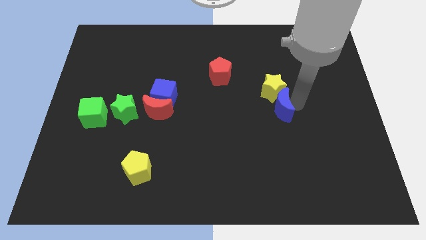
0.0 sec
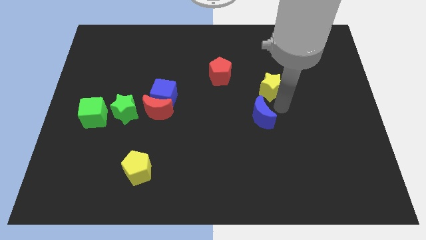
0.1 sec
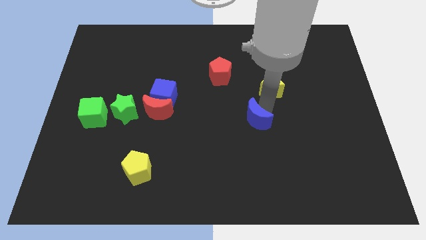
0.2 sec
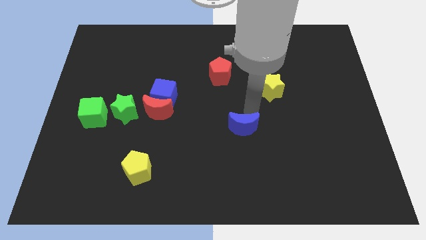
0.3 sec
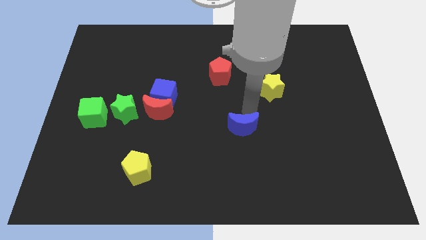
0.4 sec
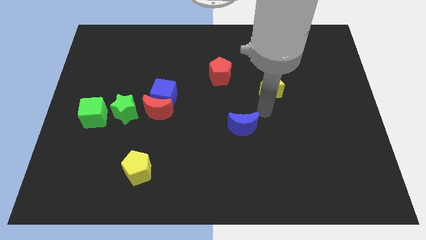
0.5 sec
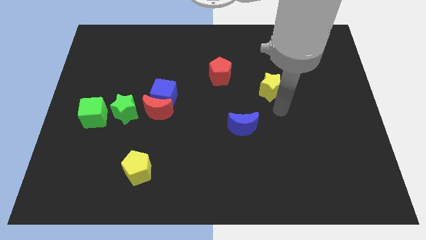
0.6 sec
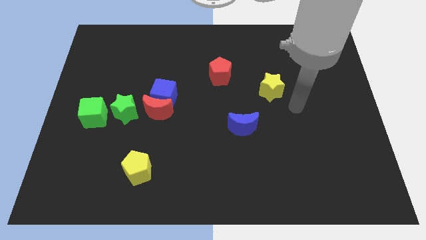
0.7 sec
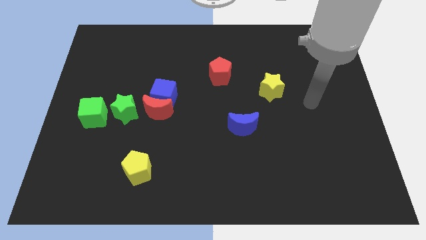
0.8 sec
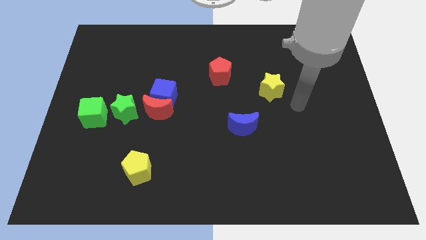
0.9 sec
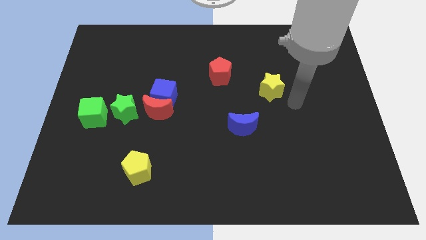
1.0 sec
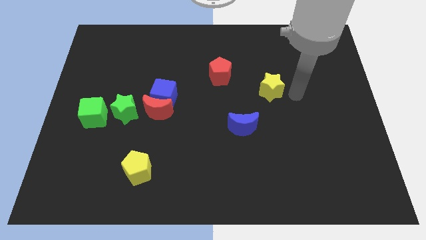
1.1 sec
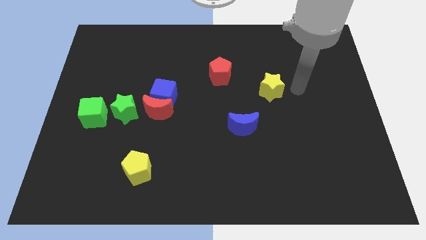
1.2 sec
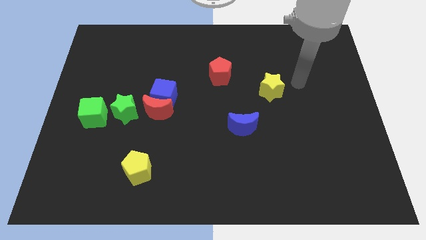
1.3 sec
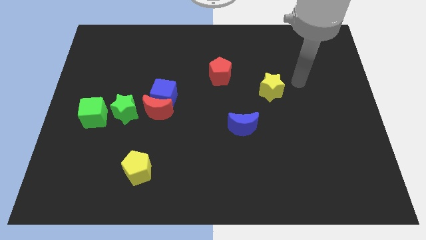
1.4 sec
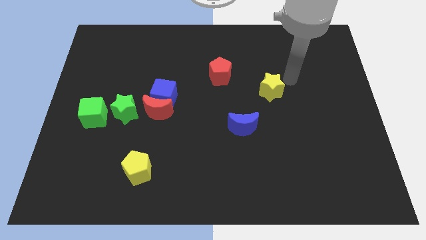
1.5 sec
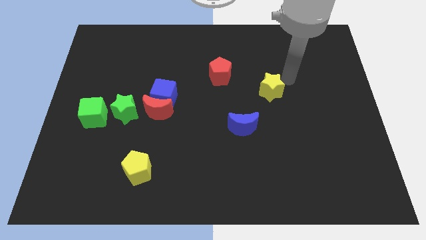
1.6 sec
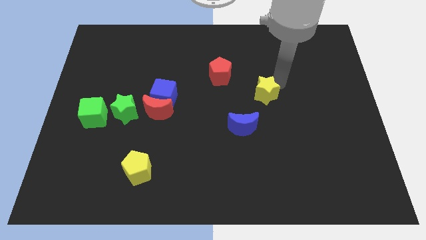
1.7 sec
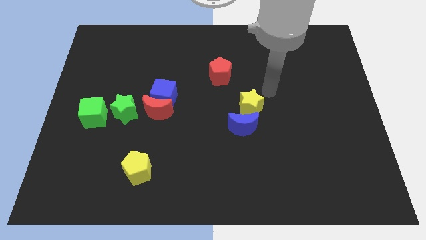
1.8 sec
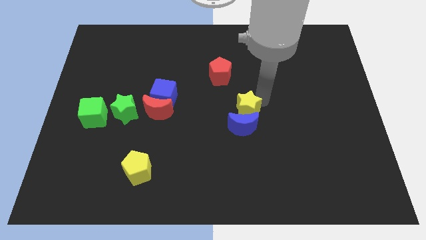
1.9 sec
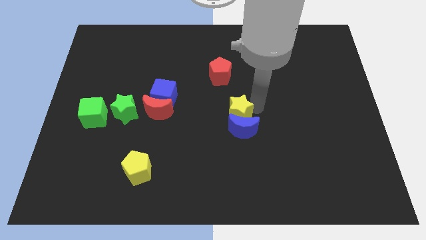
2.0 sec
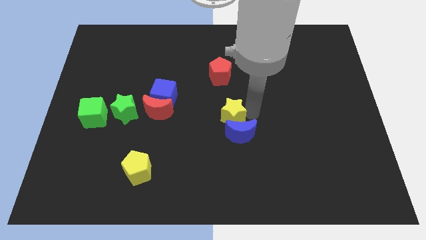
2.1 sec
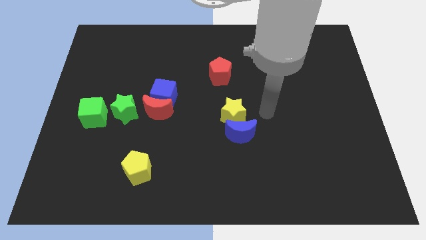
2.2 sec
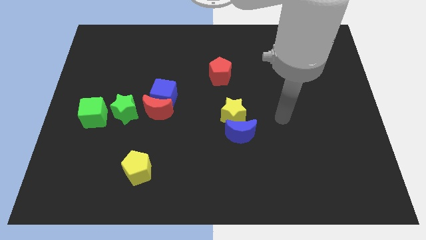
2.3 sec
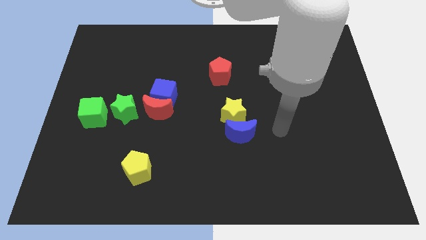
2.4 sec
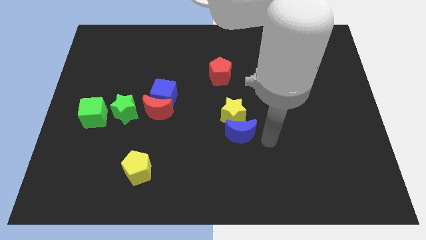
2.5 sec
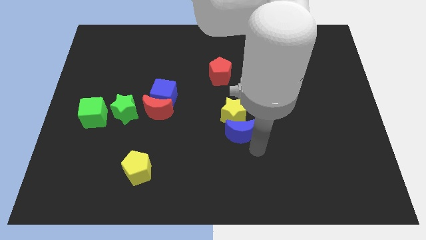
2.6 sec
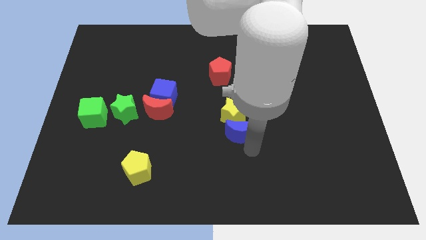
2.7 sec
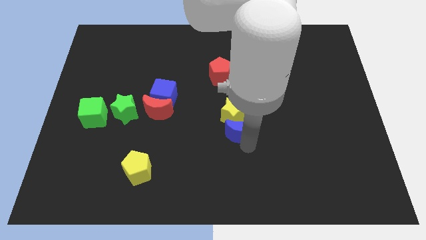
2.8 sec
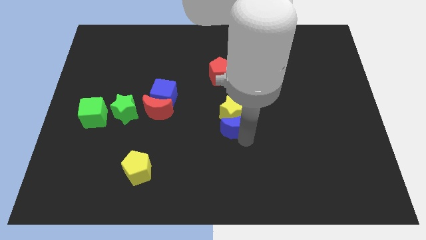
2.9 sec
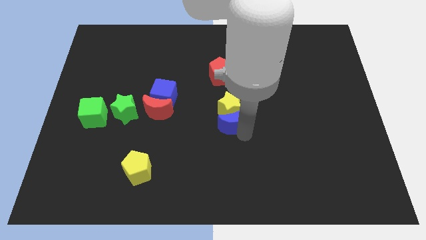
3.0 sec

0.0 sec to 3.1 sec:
separate the blue moon and yellow pentagon

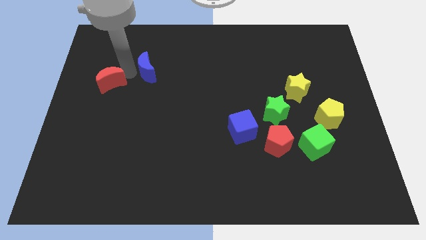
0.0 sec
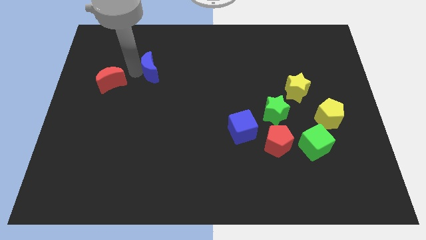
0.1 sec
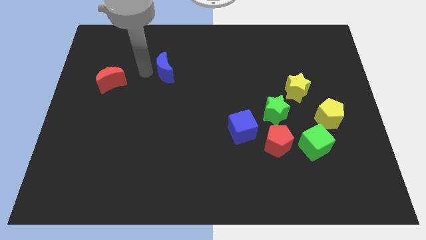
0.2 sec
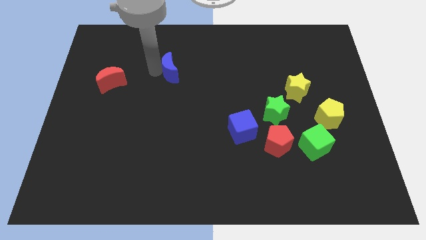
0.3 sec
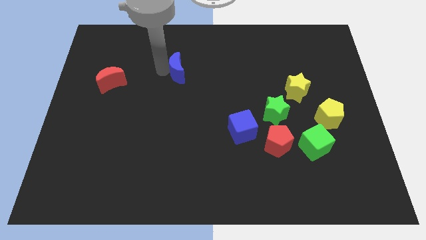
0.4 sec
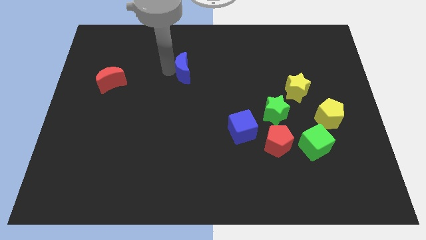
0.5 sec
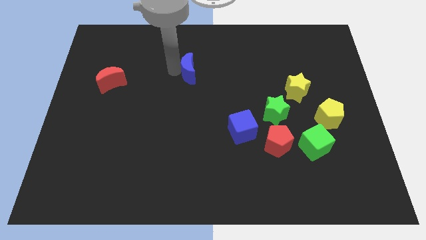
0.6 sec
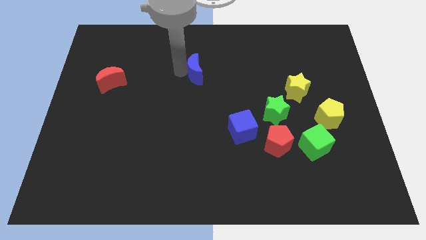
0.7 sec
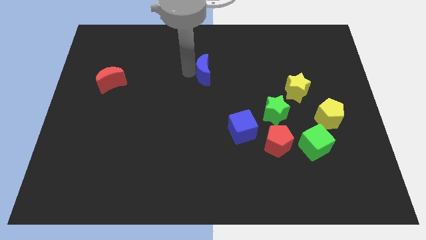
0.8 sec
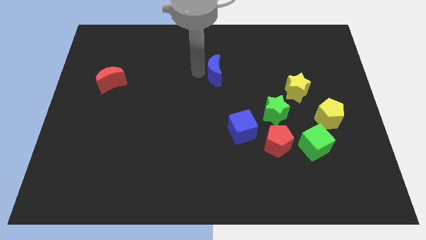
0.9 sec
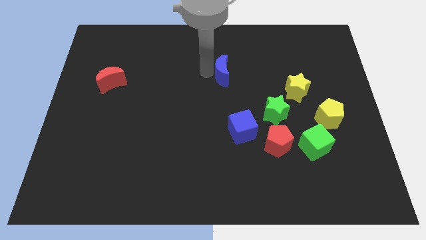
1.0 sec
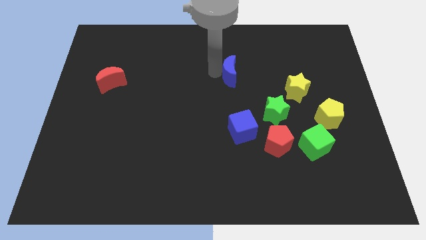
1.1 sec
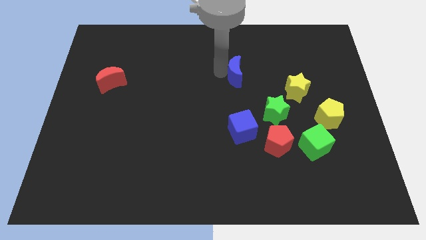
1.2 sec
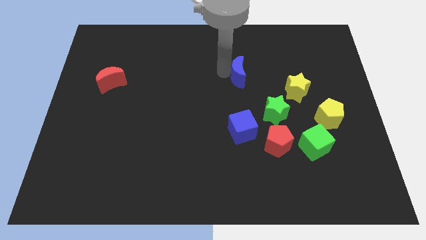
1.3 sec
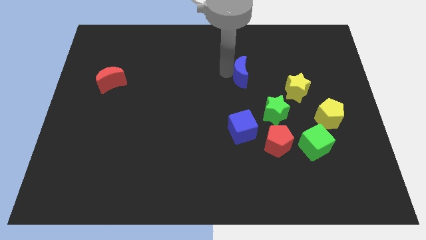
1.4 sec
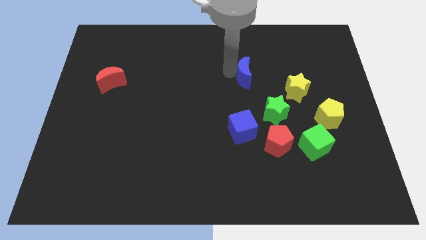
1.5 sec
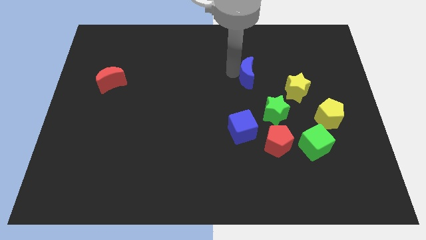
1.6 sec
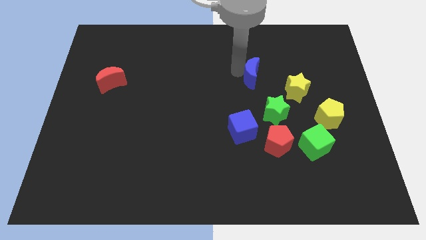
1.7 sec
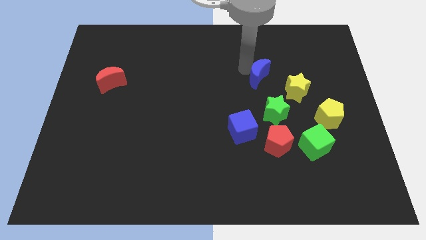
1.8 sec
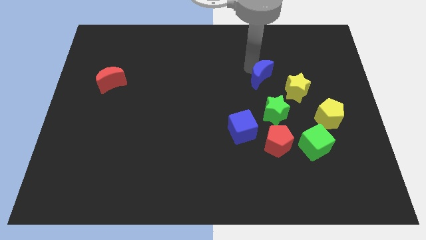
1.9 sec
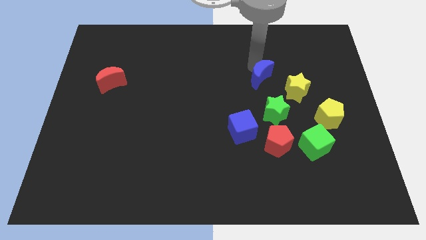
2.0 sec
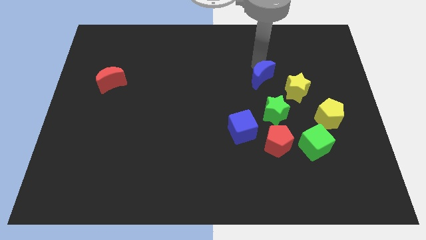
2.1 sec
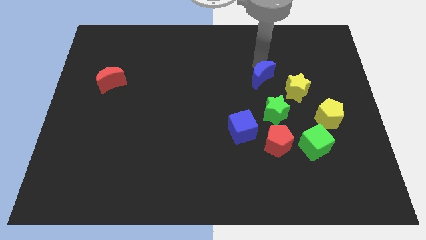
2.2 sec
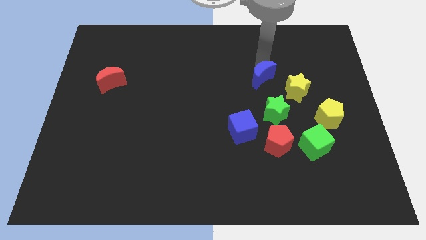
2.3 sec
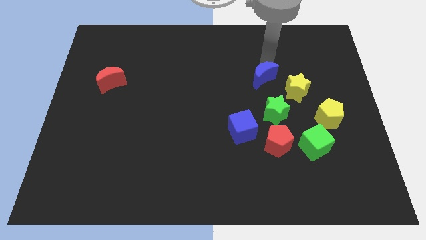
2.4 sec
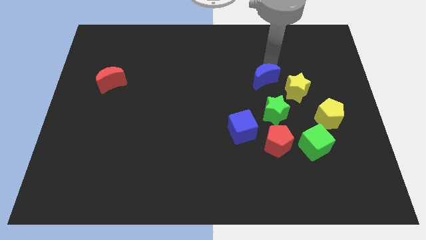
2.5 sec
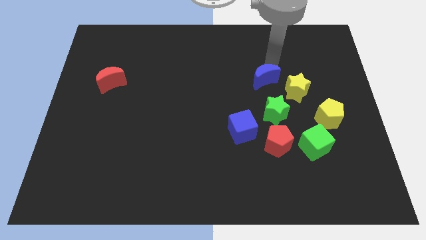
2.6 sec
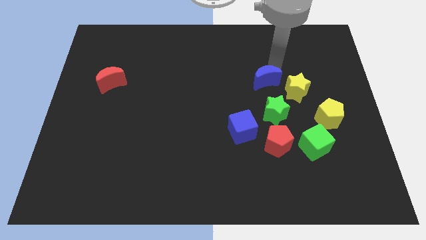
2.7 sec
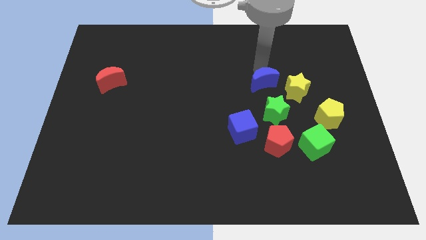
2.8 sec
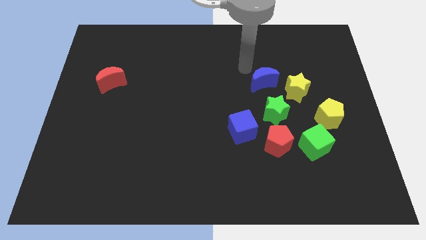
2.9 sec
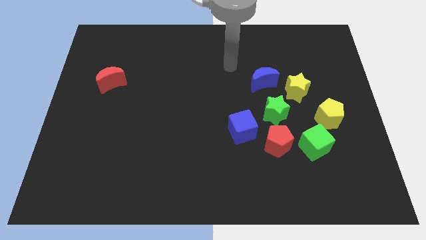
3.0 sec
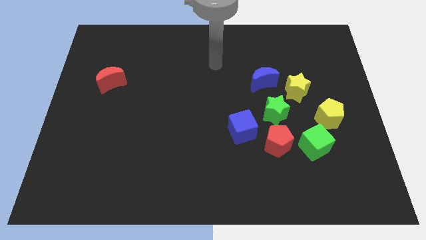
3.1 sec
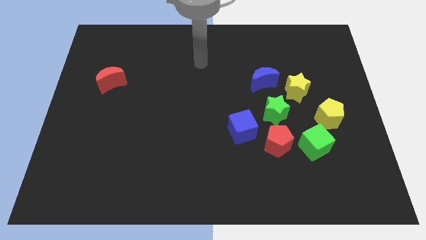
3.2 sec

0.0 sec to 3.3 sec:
put the blue crescent on the left side of the yellow star

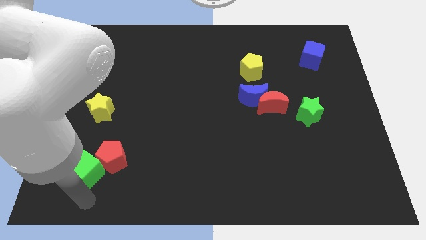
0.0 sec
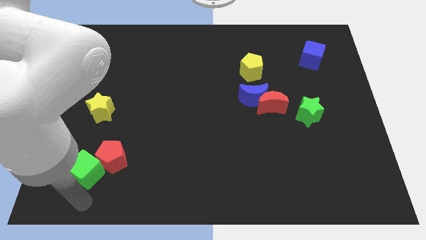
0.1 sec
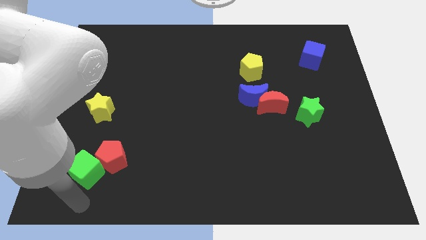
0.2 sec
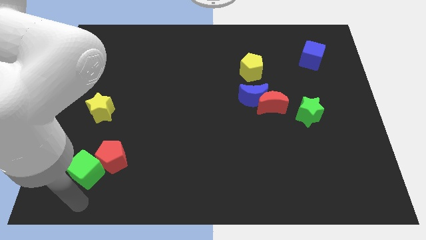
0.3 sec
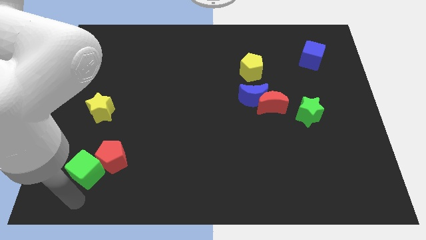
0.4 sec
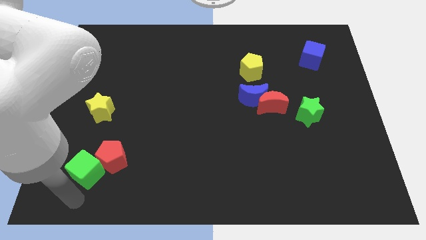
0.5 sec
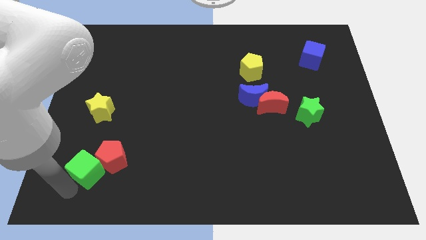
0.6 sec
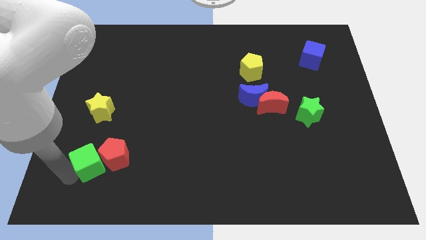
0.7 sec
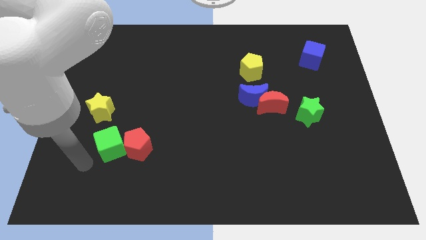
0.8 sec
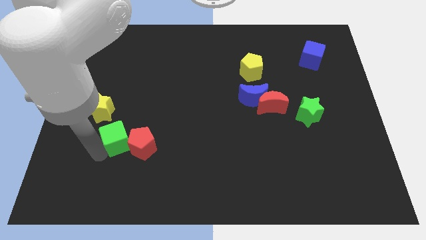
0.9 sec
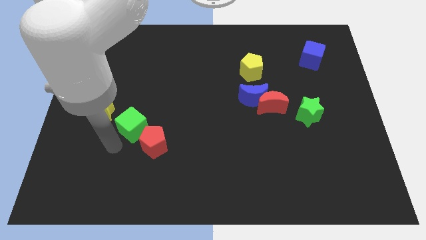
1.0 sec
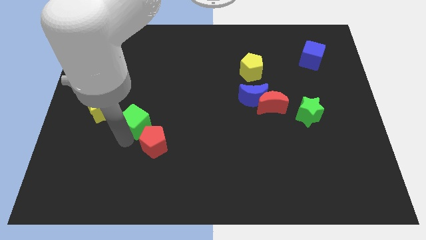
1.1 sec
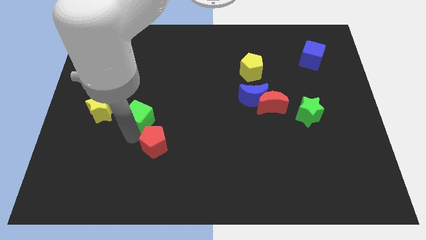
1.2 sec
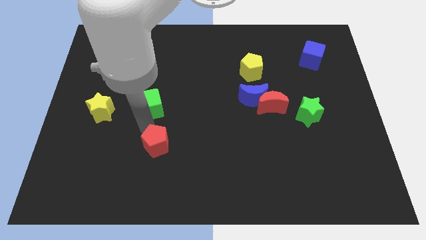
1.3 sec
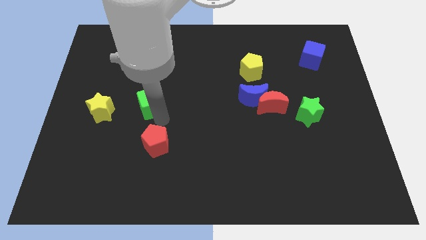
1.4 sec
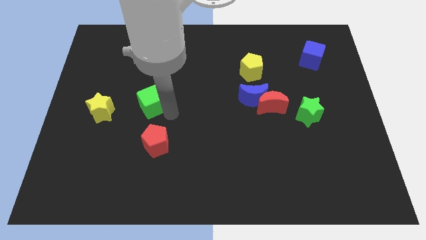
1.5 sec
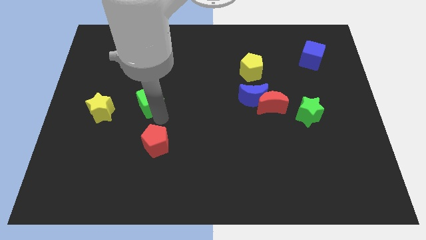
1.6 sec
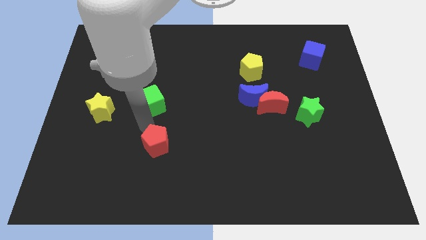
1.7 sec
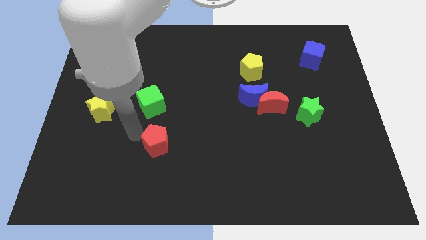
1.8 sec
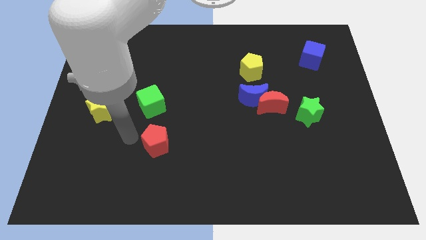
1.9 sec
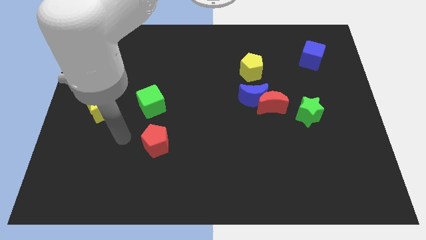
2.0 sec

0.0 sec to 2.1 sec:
push green cube slightly center of the board

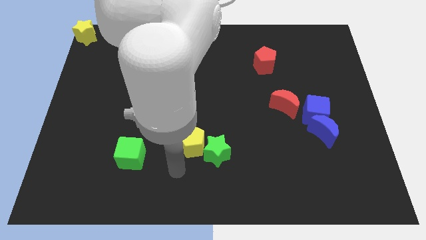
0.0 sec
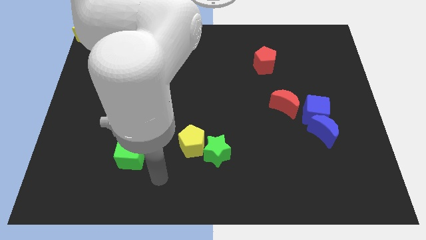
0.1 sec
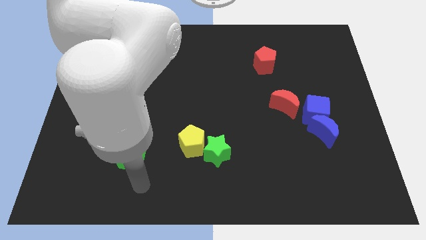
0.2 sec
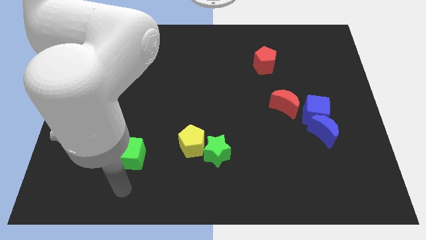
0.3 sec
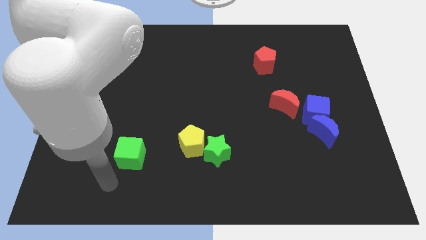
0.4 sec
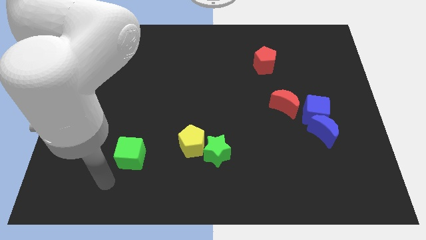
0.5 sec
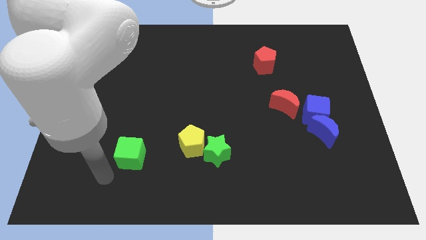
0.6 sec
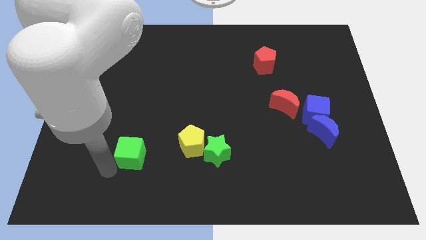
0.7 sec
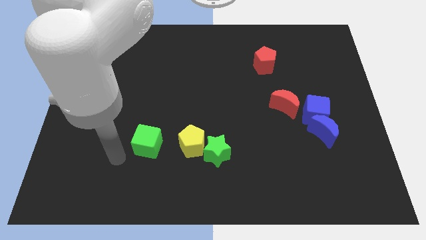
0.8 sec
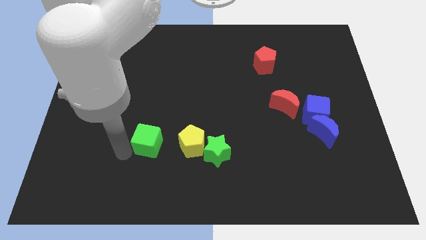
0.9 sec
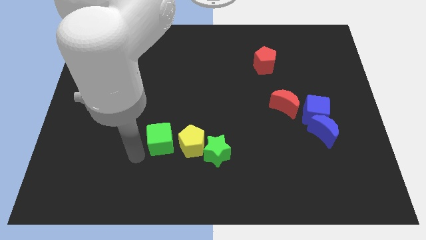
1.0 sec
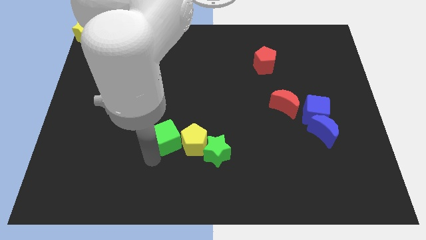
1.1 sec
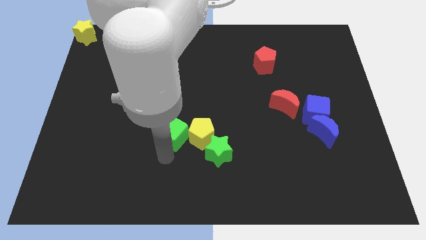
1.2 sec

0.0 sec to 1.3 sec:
push the green cube into the yellow pentagon
